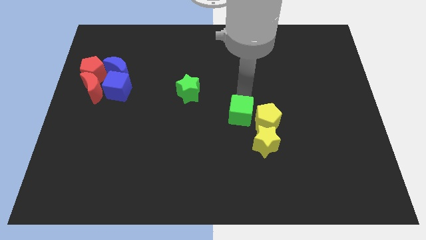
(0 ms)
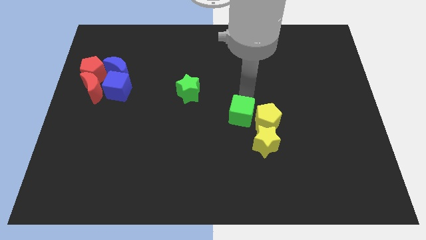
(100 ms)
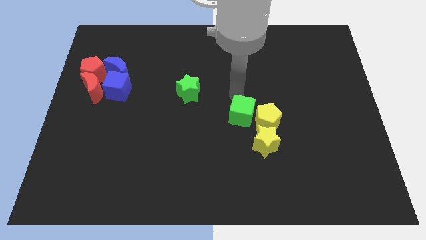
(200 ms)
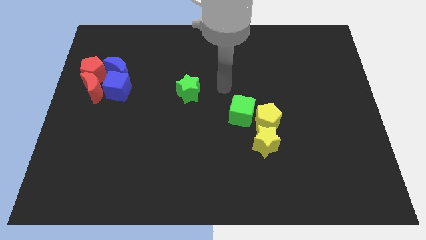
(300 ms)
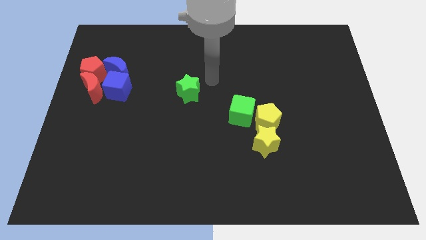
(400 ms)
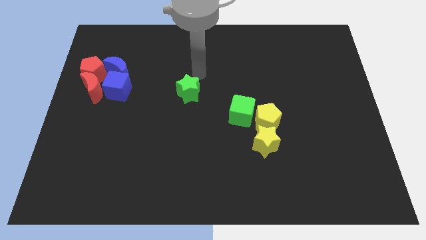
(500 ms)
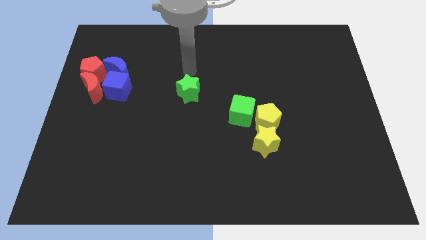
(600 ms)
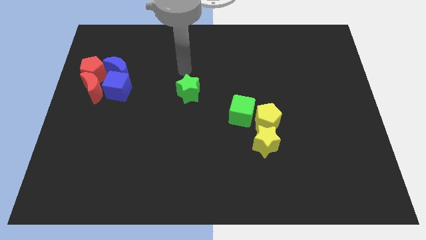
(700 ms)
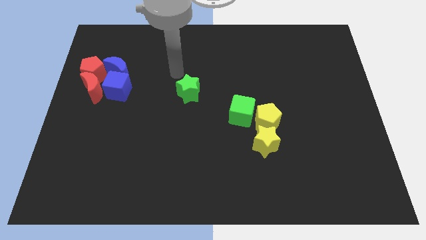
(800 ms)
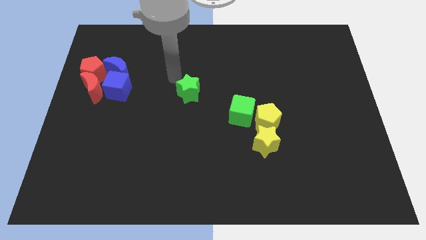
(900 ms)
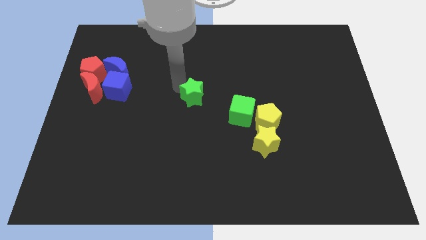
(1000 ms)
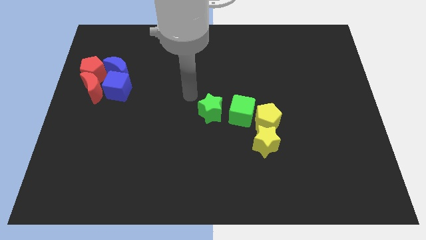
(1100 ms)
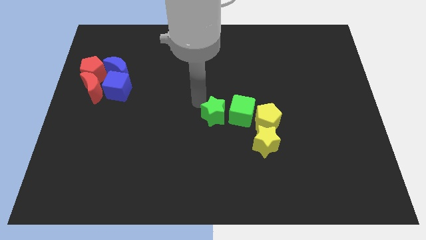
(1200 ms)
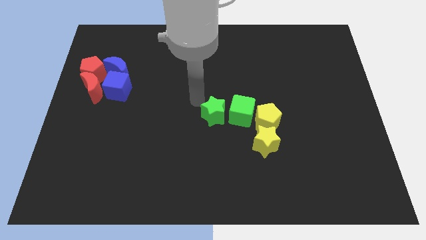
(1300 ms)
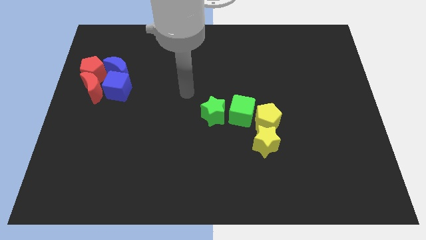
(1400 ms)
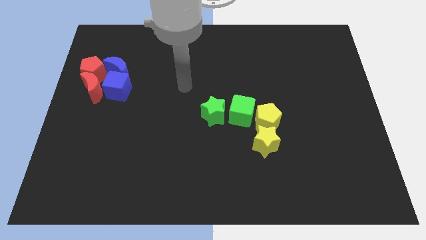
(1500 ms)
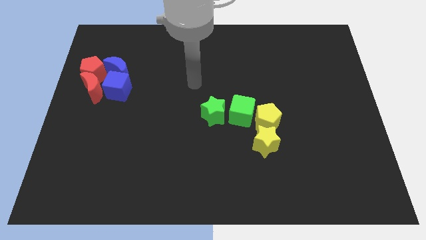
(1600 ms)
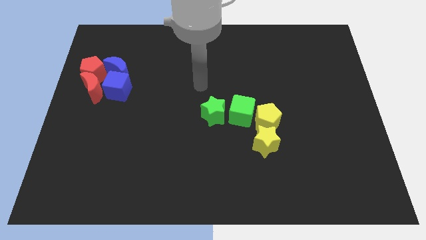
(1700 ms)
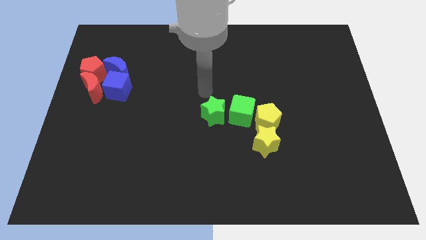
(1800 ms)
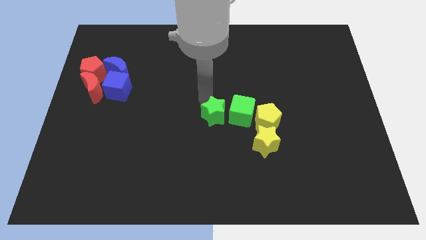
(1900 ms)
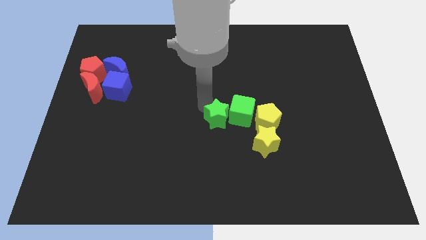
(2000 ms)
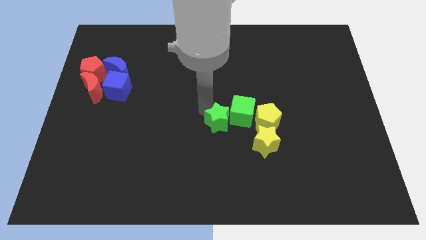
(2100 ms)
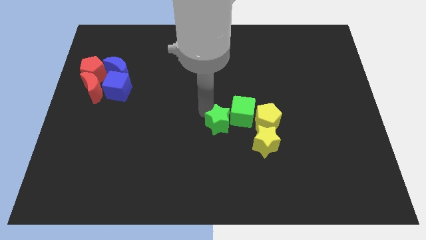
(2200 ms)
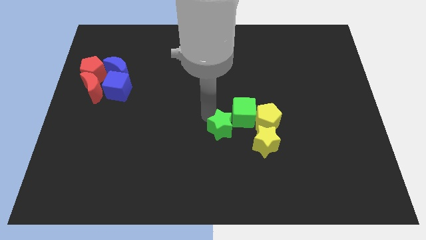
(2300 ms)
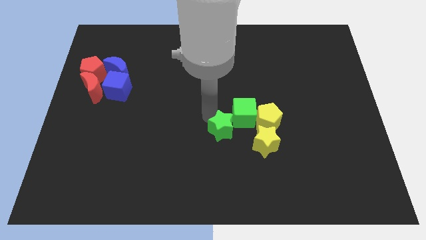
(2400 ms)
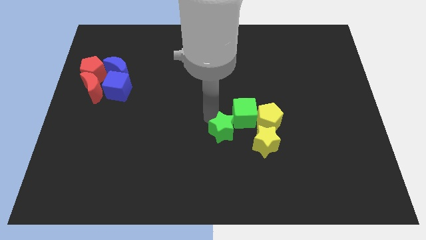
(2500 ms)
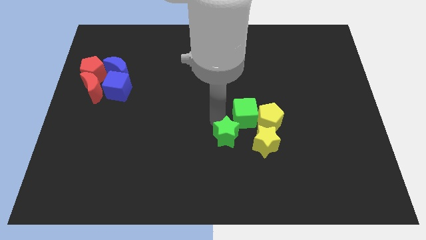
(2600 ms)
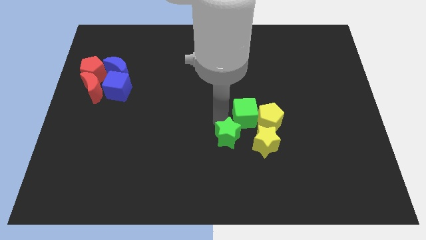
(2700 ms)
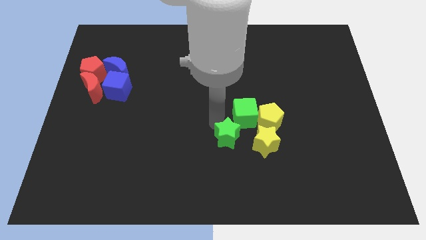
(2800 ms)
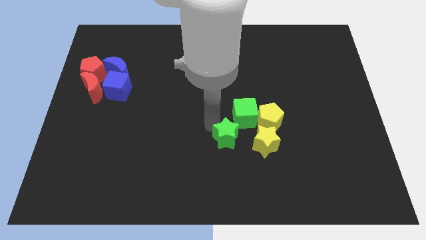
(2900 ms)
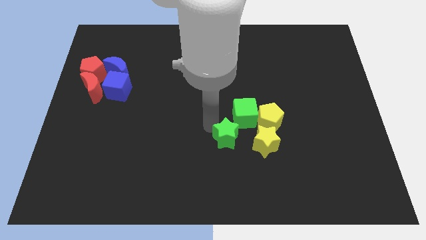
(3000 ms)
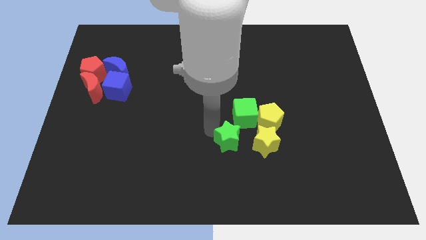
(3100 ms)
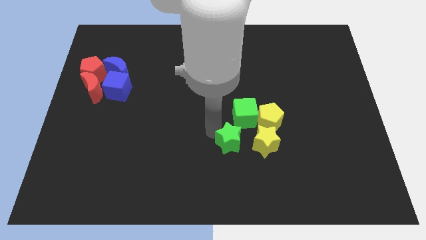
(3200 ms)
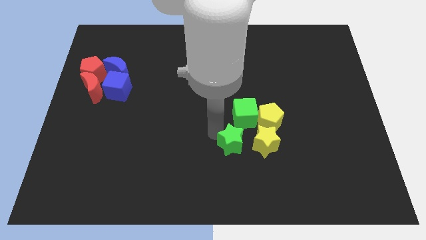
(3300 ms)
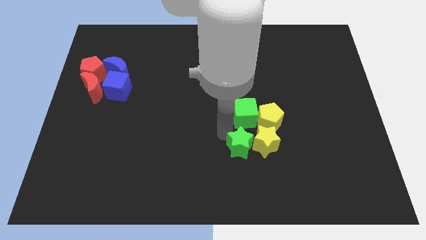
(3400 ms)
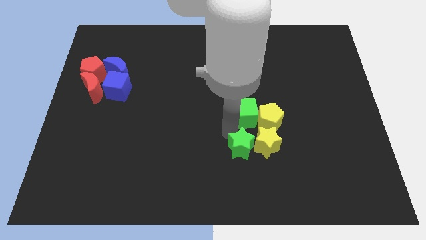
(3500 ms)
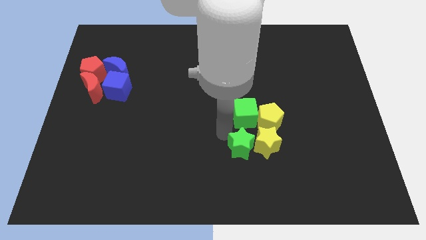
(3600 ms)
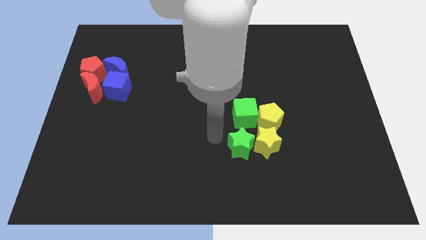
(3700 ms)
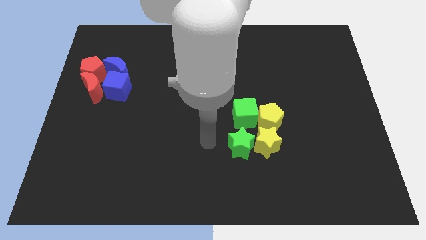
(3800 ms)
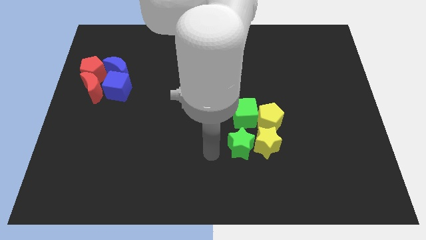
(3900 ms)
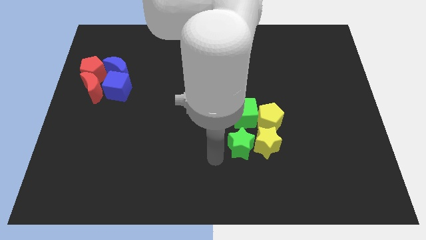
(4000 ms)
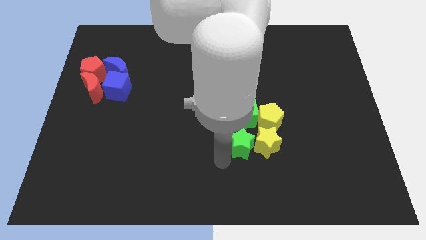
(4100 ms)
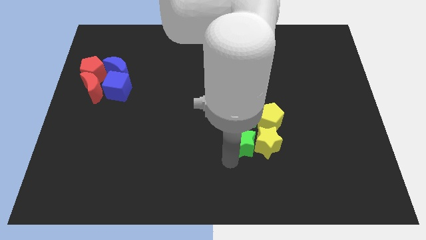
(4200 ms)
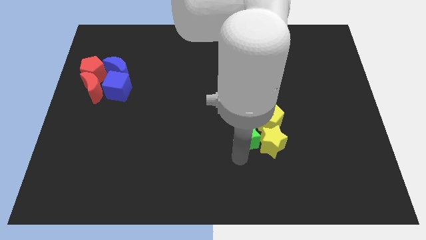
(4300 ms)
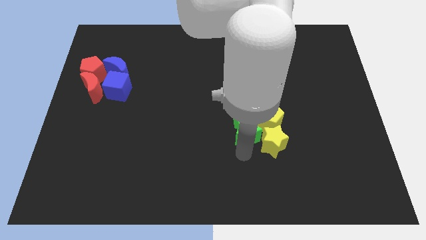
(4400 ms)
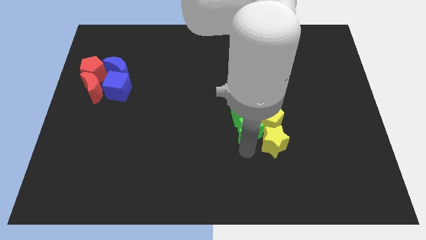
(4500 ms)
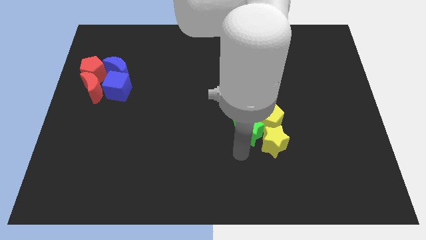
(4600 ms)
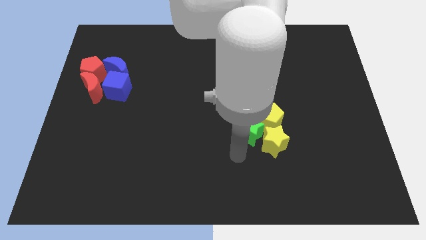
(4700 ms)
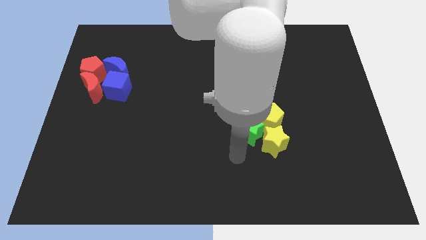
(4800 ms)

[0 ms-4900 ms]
move the green star to the left of the yellow star

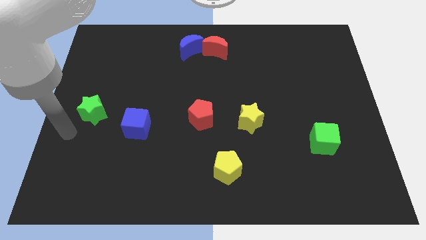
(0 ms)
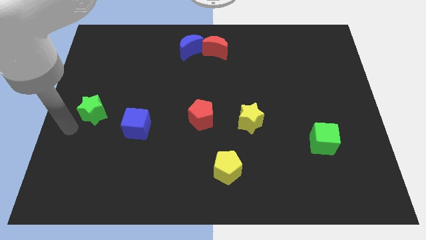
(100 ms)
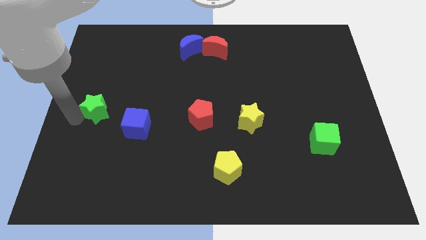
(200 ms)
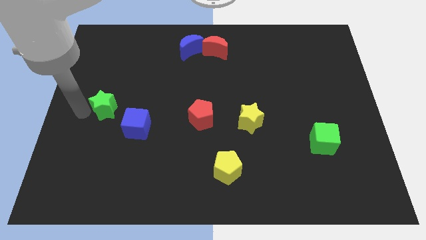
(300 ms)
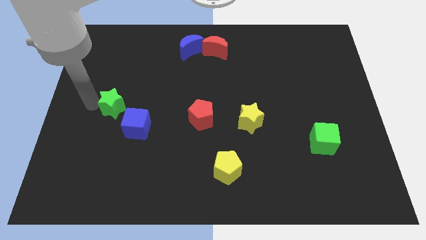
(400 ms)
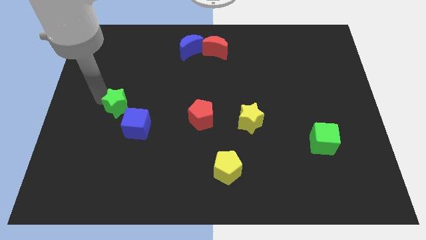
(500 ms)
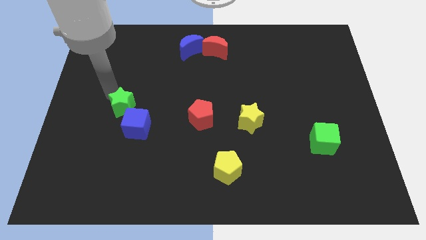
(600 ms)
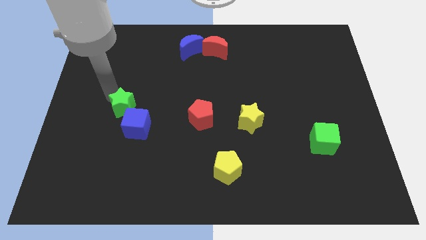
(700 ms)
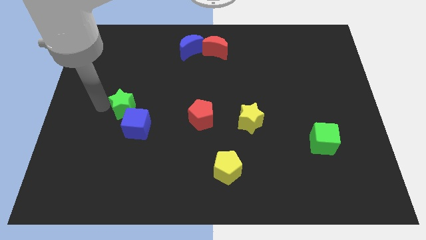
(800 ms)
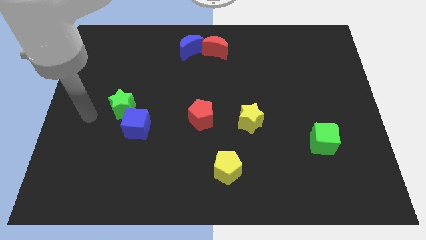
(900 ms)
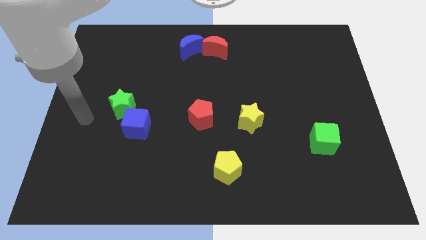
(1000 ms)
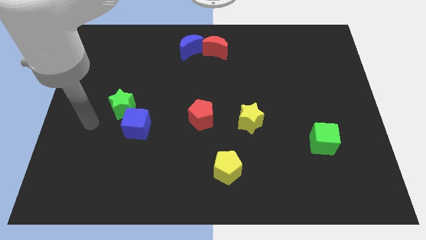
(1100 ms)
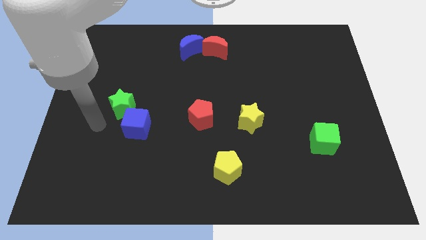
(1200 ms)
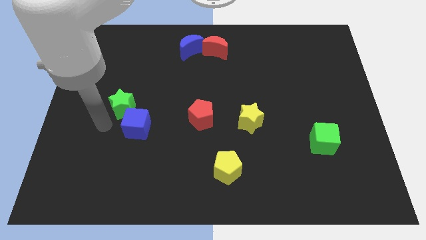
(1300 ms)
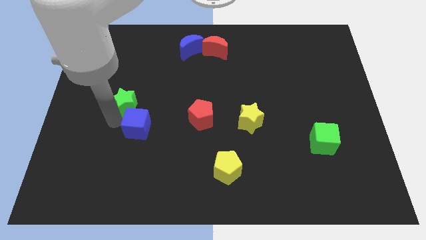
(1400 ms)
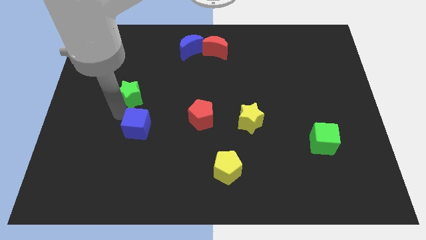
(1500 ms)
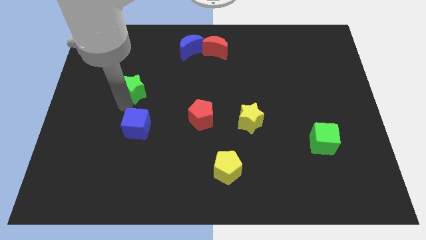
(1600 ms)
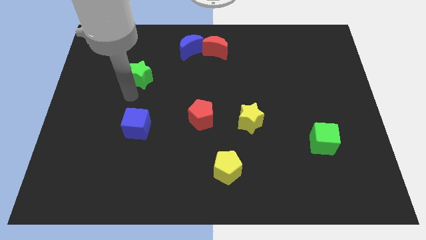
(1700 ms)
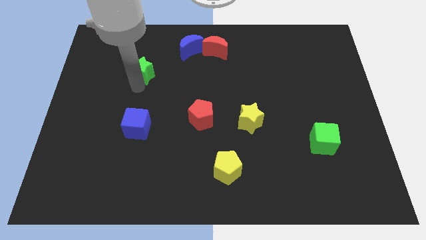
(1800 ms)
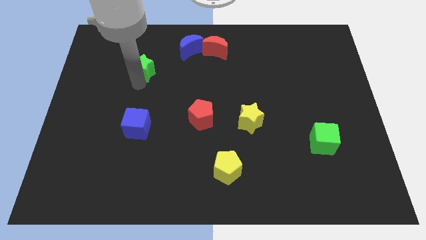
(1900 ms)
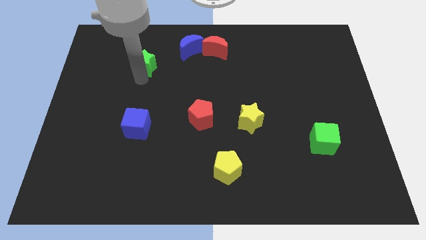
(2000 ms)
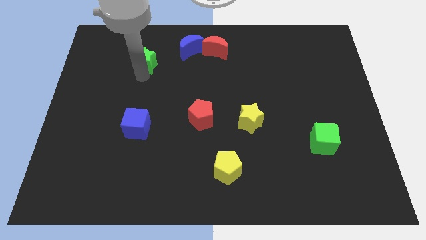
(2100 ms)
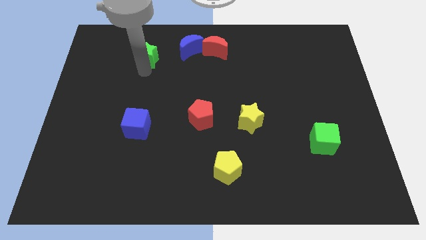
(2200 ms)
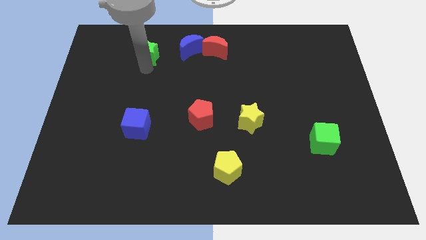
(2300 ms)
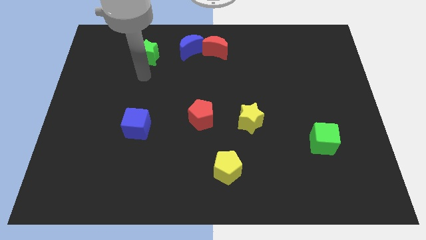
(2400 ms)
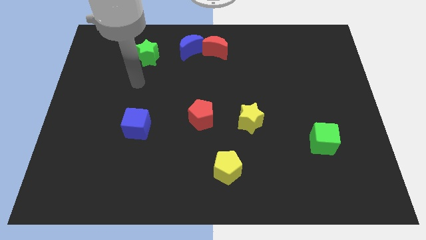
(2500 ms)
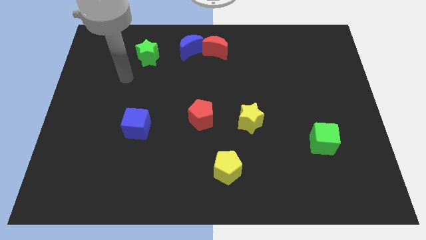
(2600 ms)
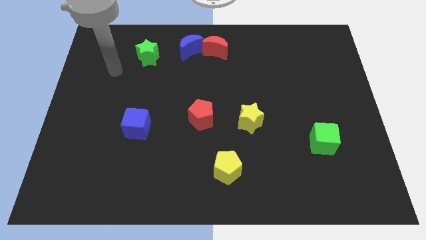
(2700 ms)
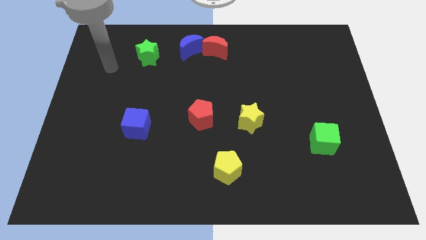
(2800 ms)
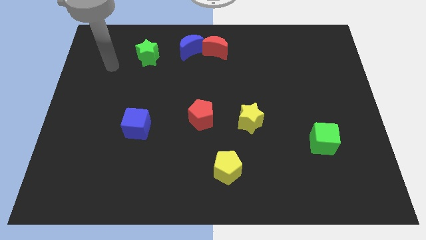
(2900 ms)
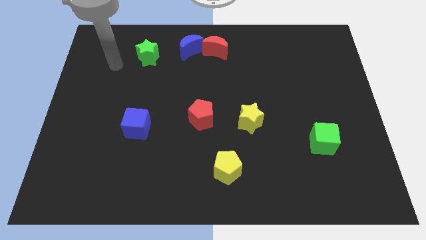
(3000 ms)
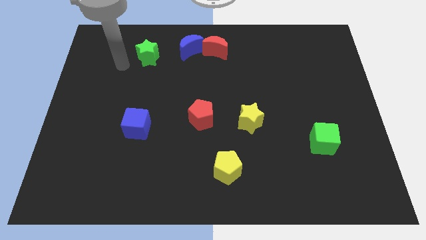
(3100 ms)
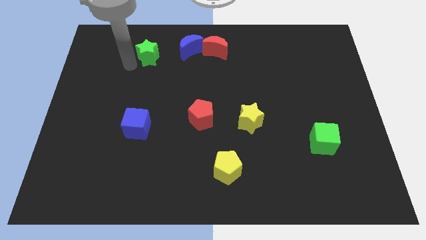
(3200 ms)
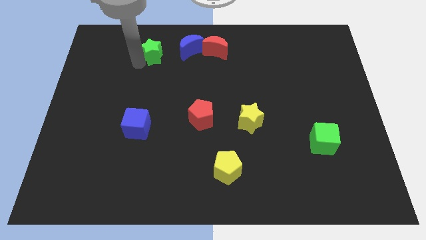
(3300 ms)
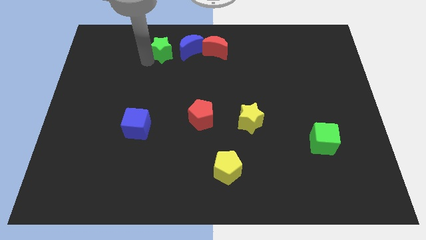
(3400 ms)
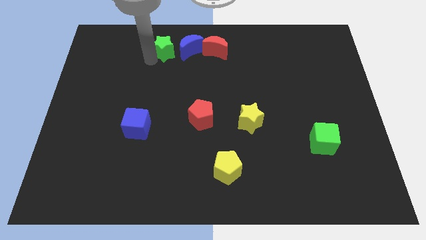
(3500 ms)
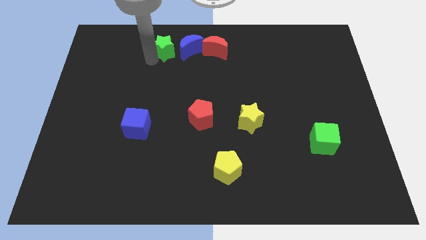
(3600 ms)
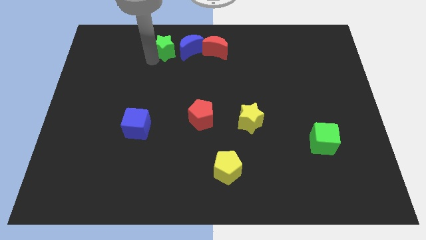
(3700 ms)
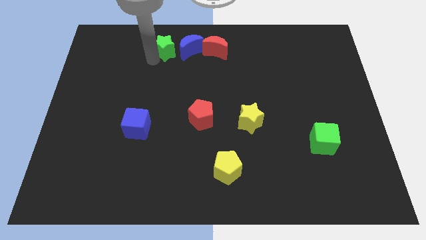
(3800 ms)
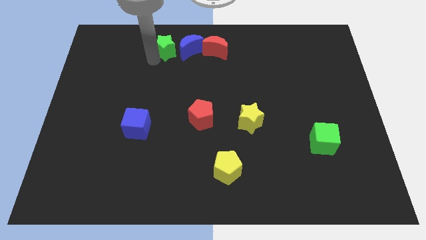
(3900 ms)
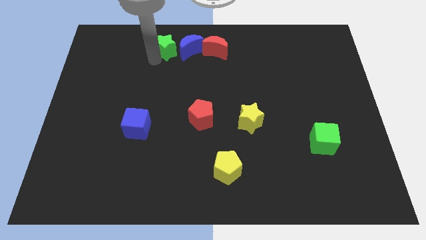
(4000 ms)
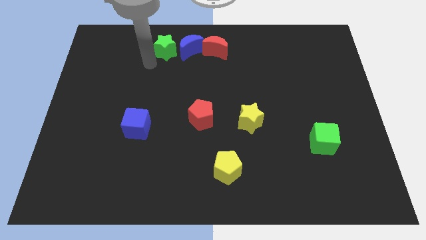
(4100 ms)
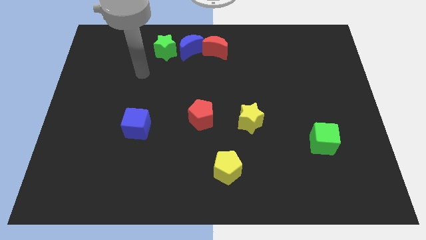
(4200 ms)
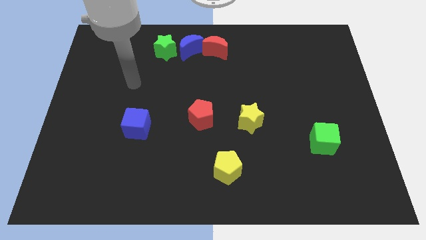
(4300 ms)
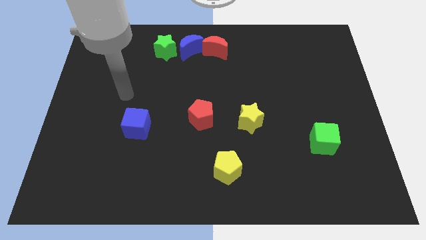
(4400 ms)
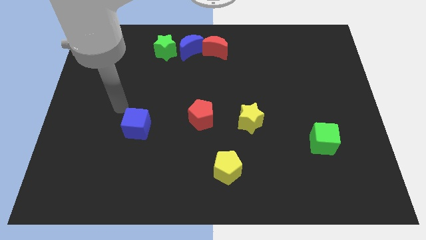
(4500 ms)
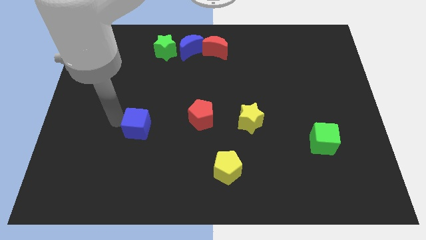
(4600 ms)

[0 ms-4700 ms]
place green star to the left side of blue moon
